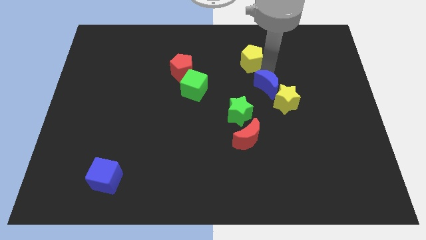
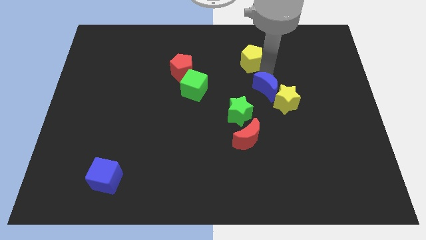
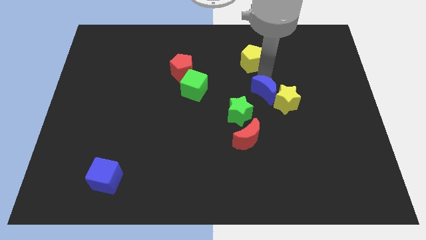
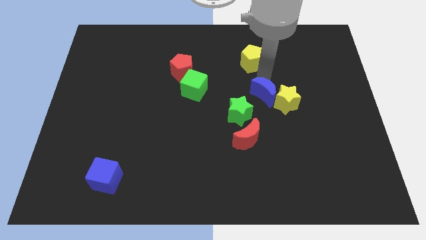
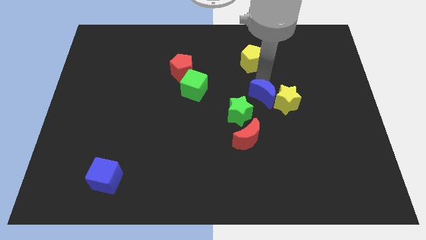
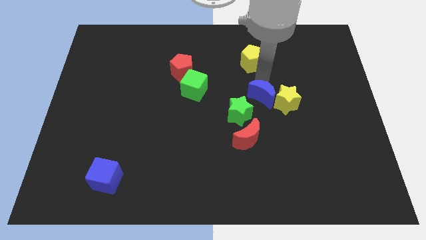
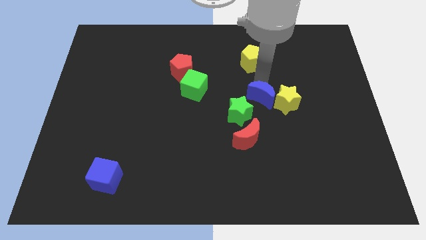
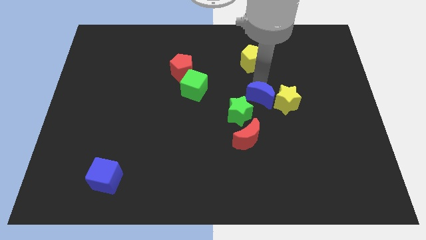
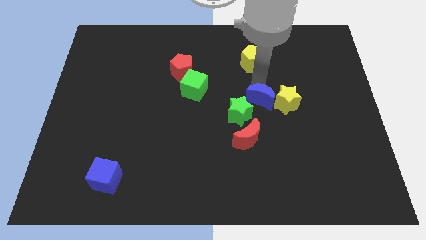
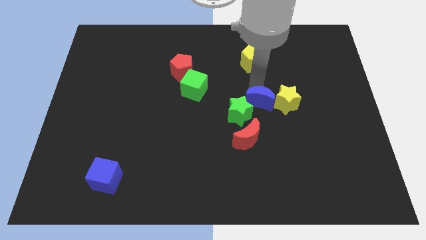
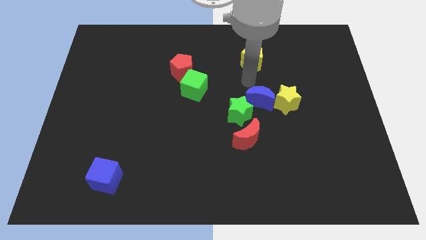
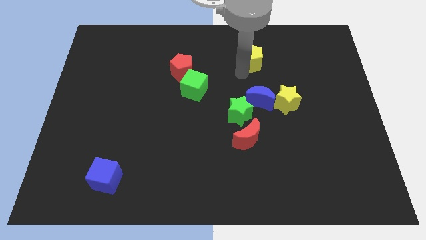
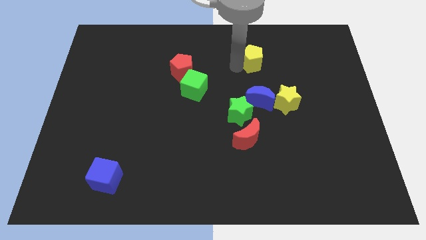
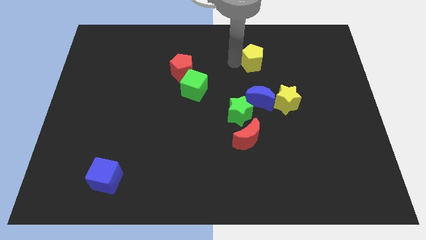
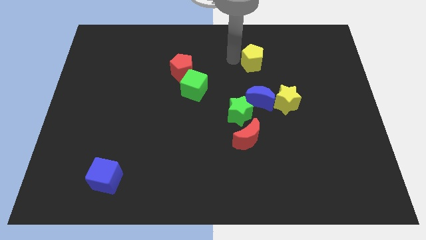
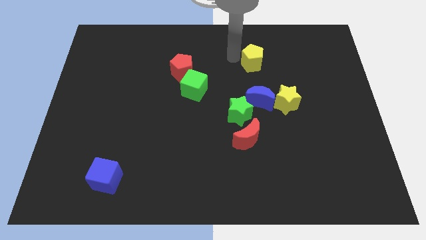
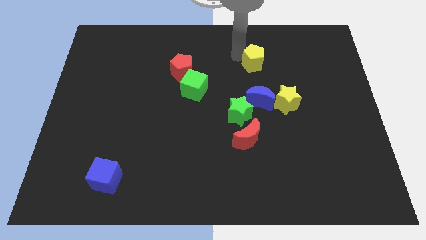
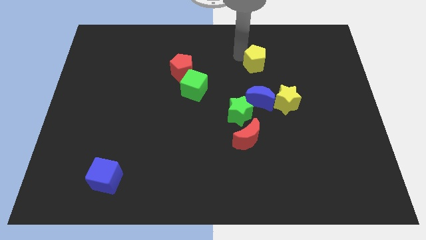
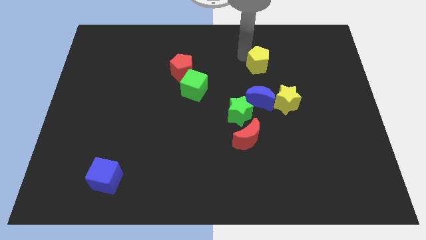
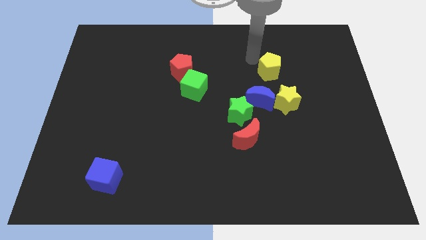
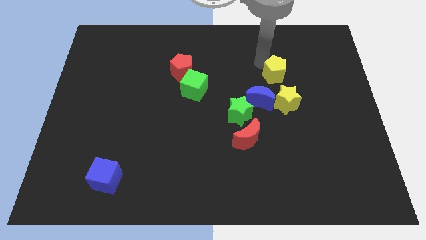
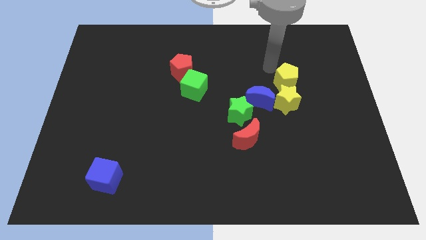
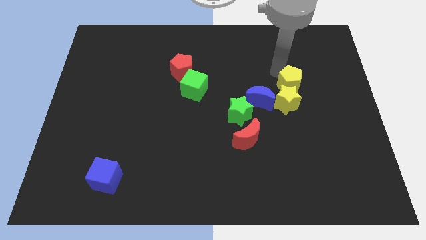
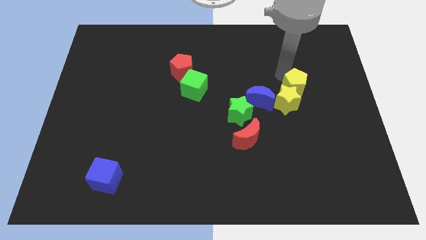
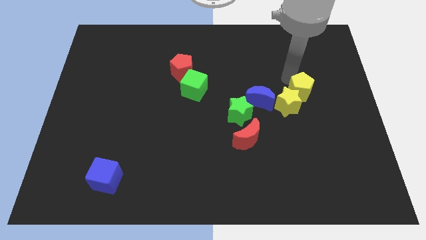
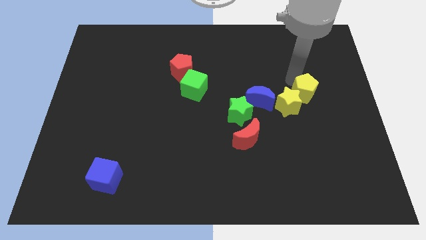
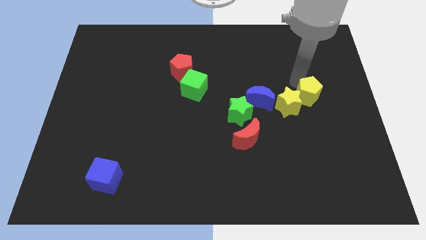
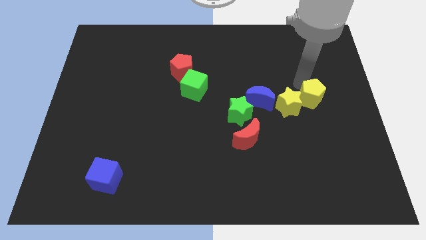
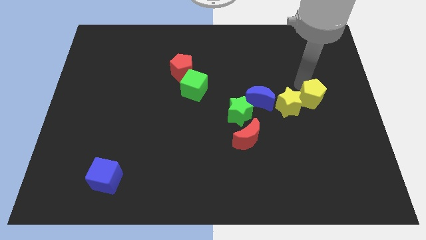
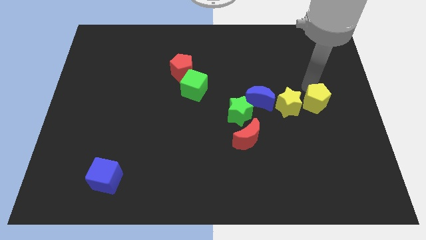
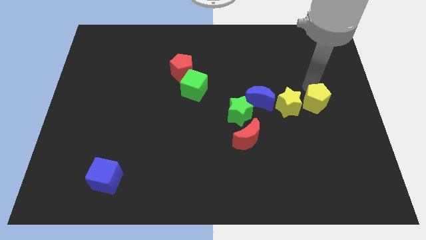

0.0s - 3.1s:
push yellow pentagon beside yellow star

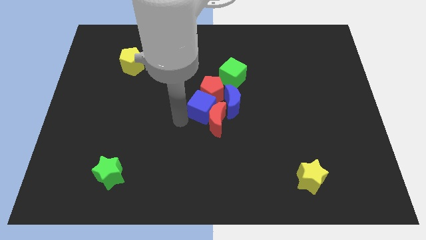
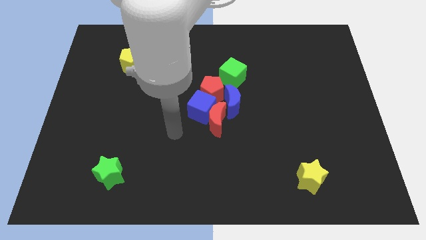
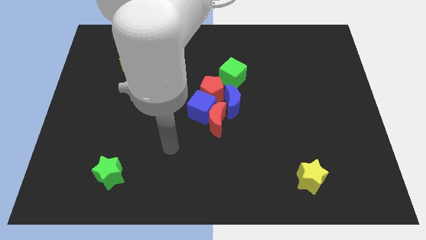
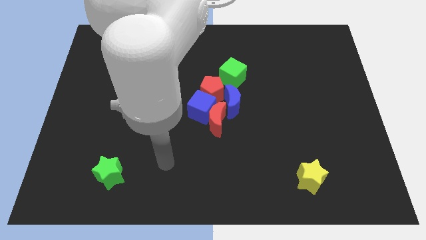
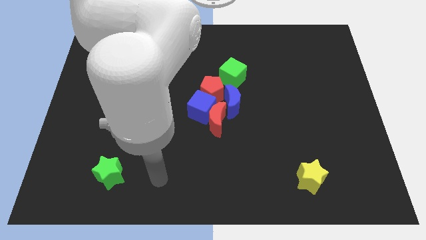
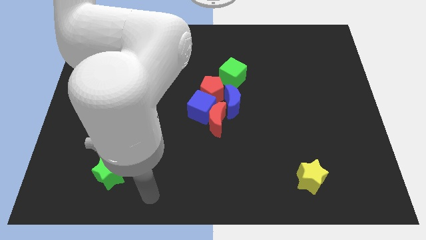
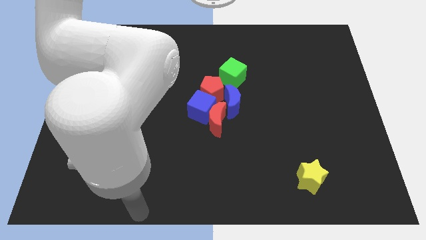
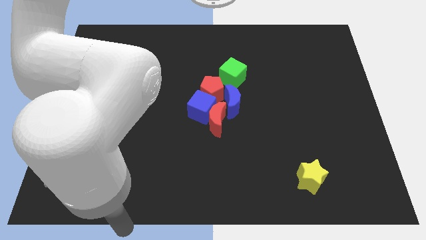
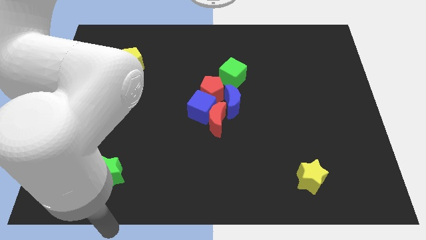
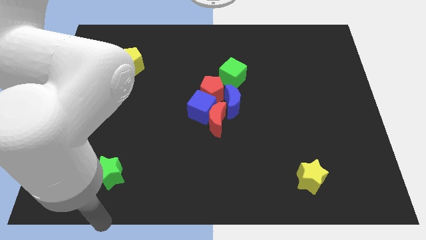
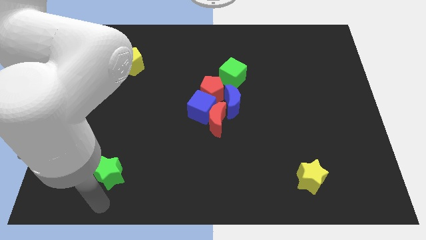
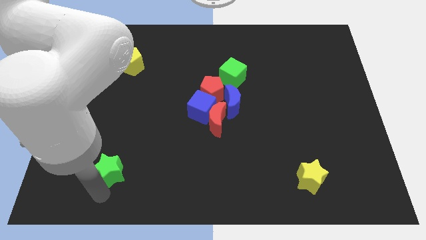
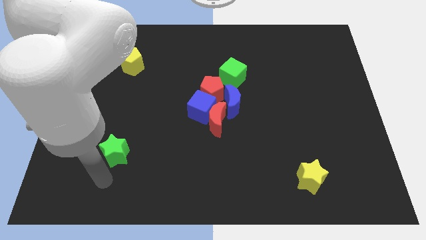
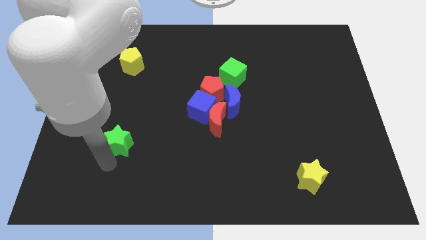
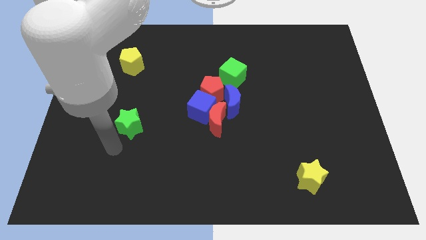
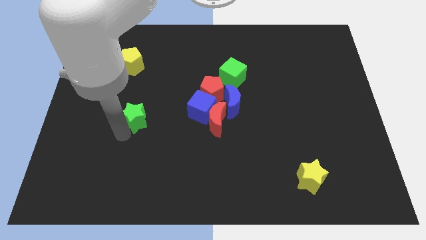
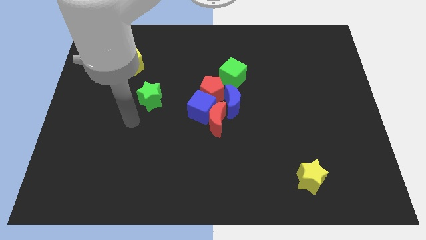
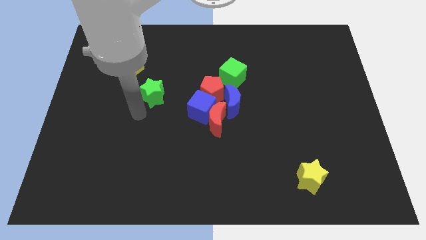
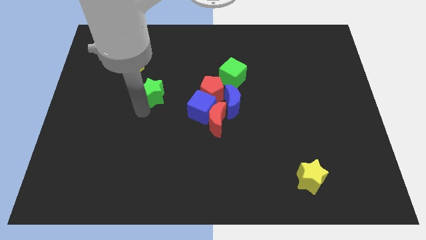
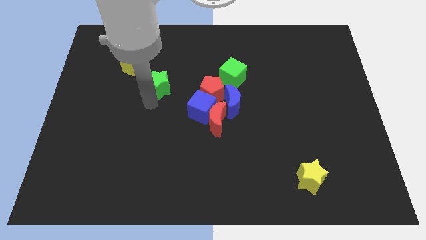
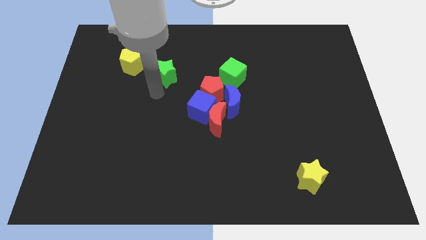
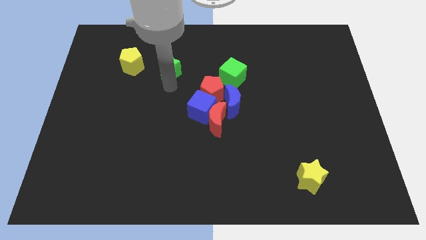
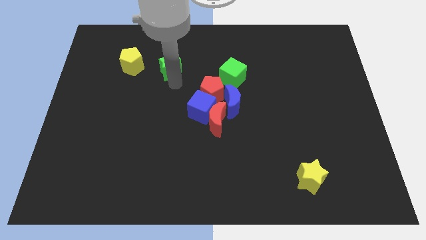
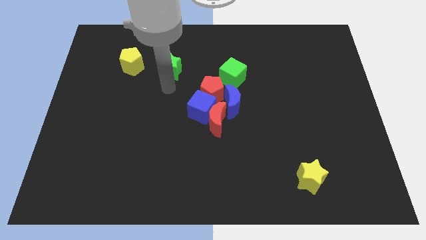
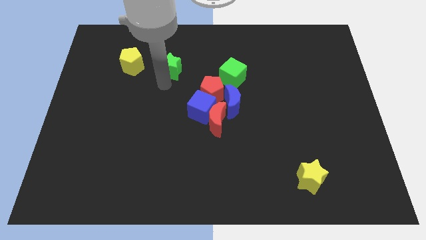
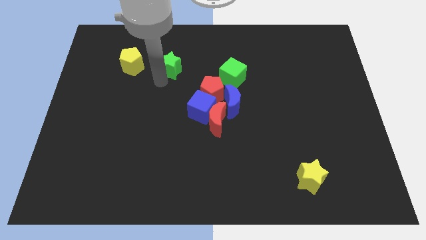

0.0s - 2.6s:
place the green star right to the yellow pentagon

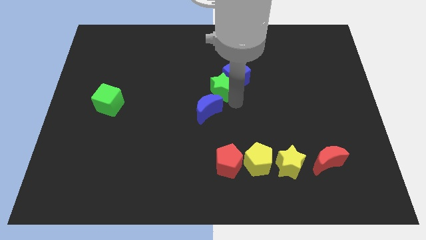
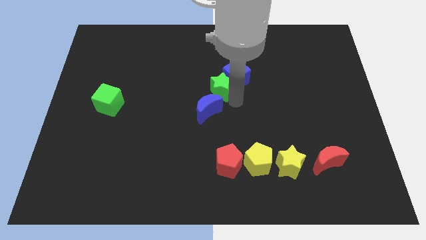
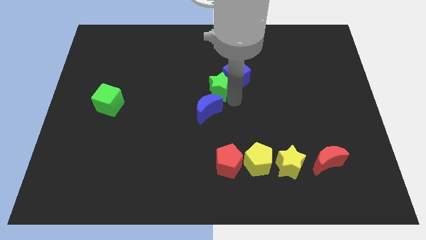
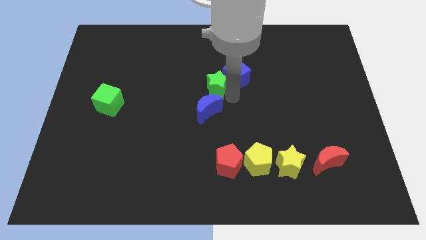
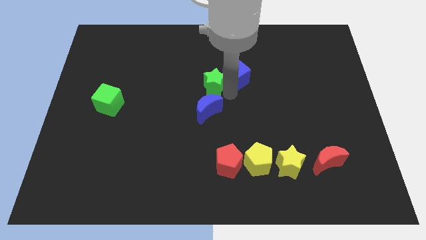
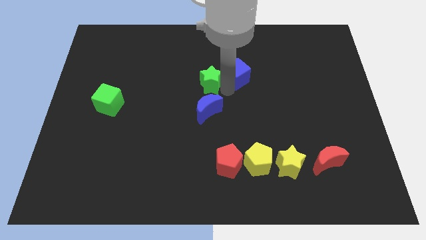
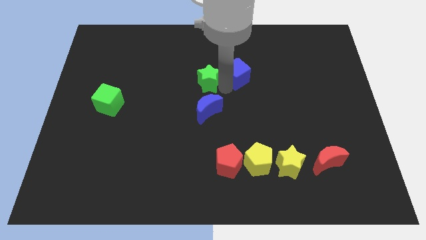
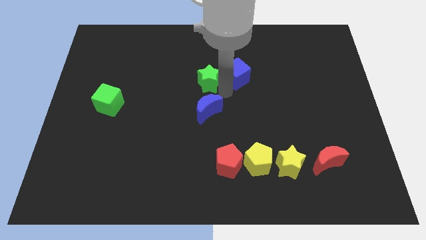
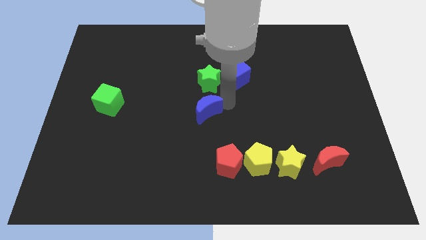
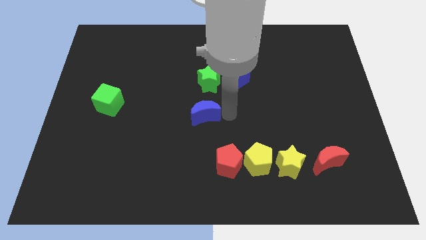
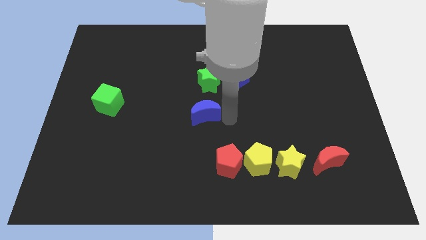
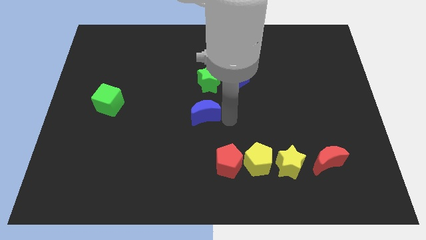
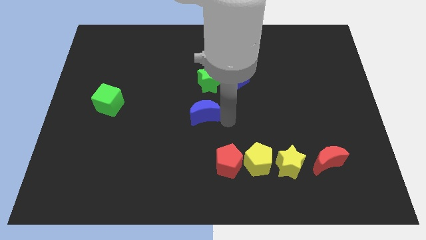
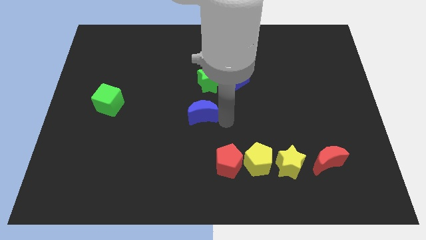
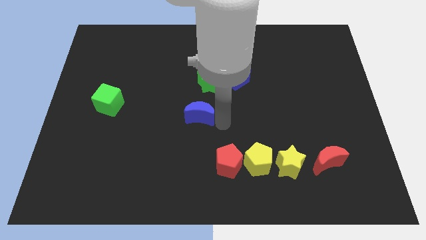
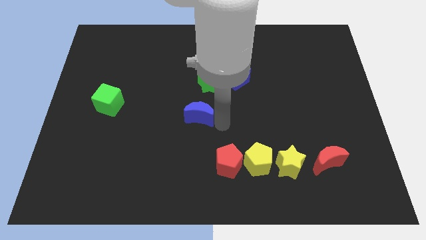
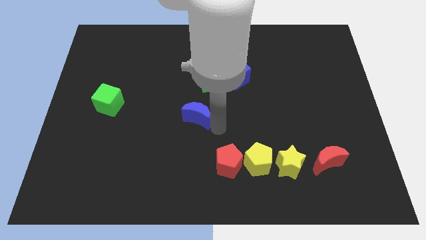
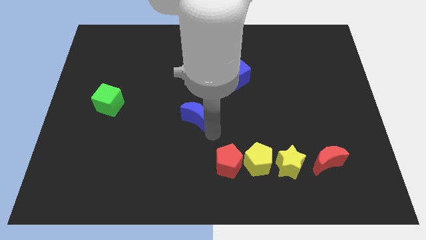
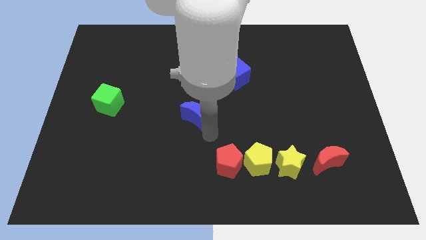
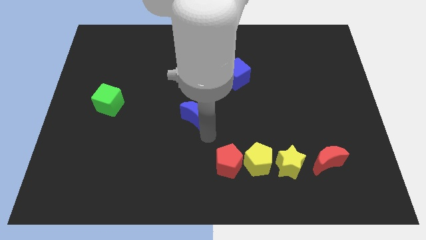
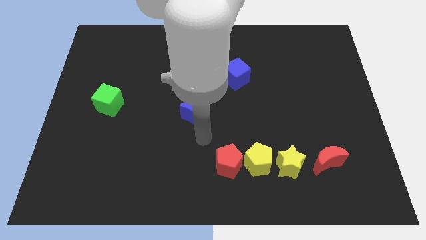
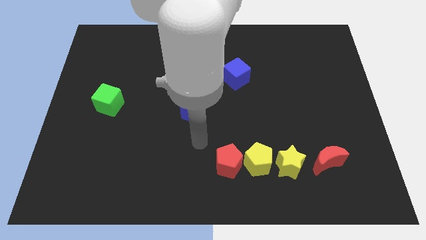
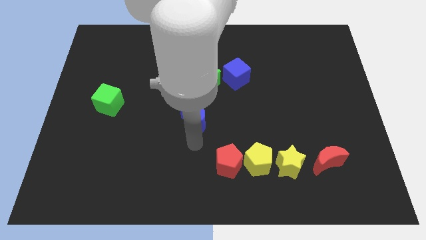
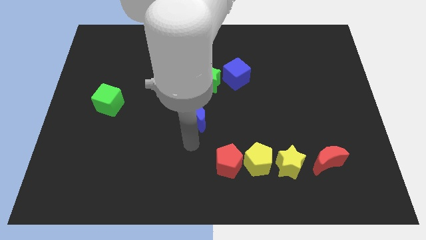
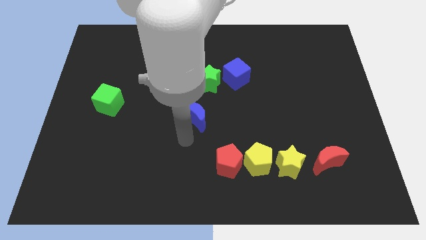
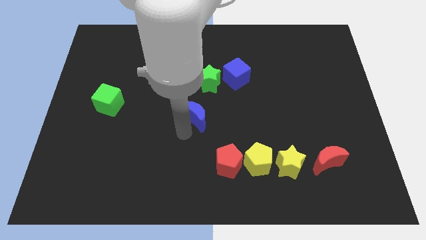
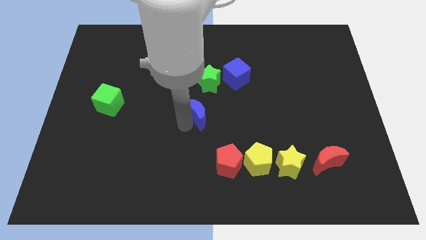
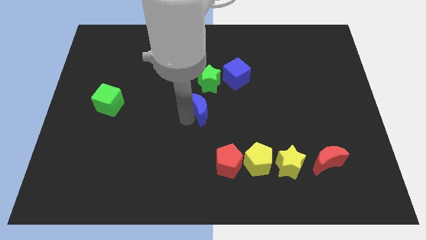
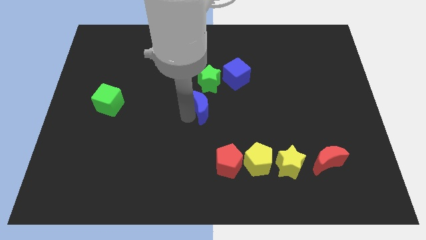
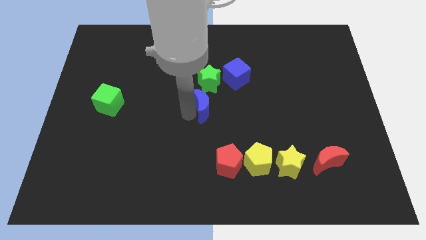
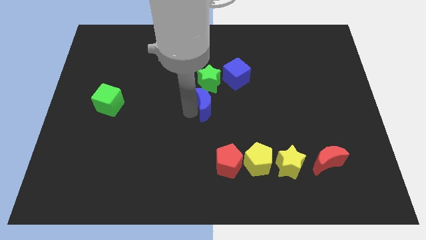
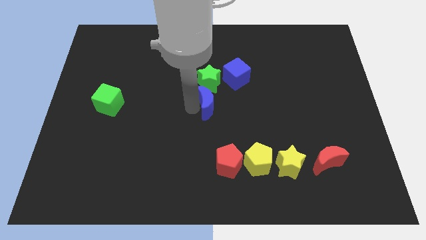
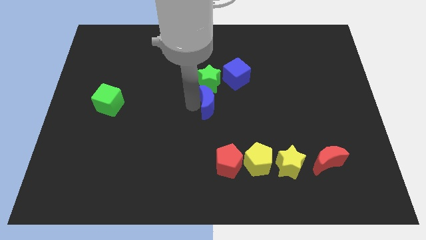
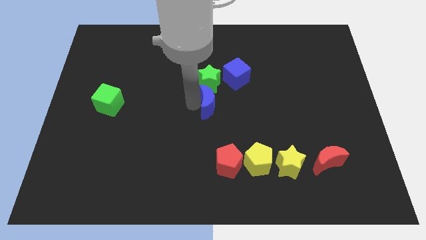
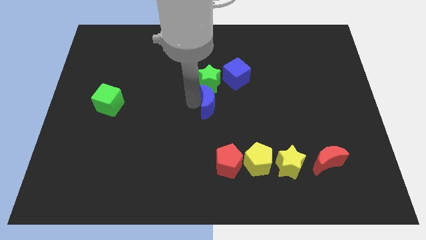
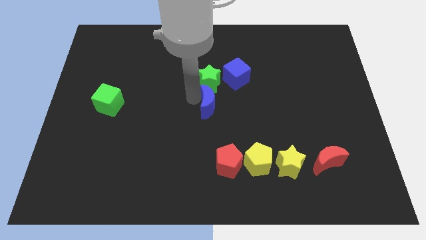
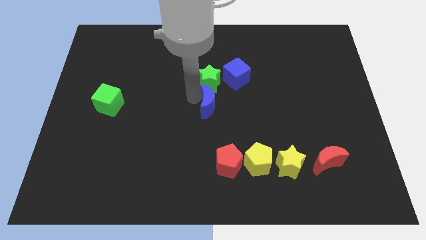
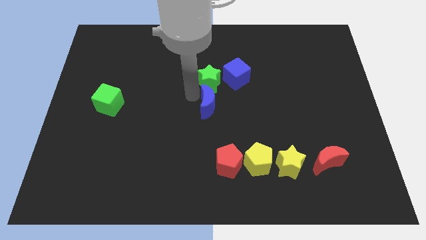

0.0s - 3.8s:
move the blue crescent to the bottom left side of the green star
